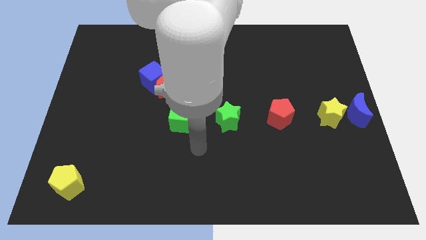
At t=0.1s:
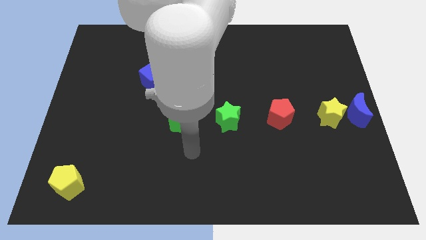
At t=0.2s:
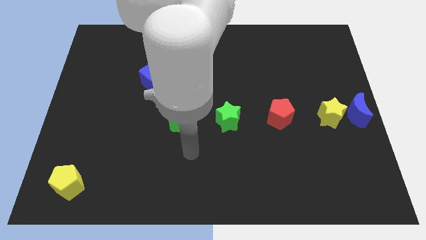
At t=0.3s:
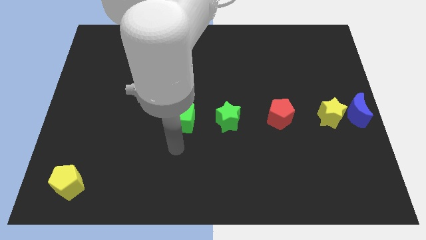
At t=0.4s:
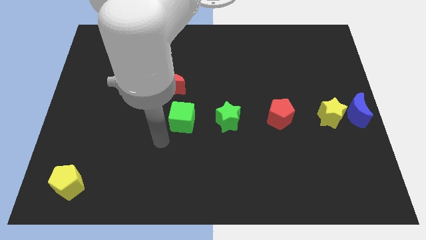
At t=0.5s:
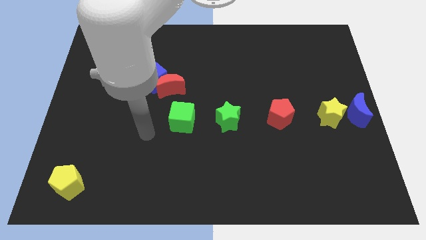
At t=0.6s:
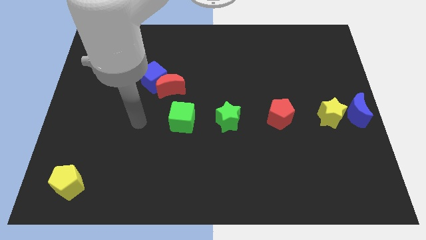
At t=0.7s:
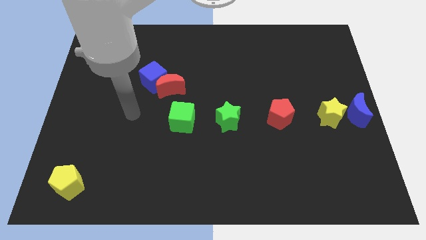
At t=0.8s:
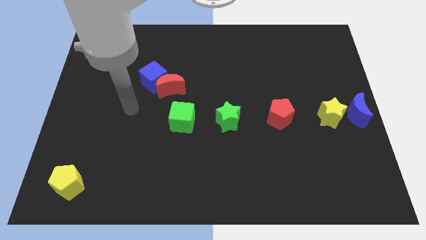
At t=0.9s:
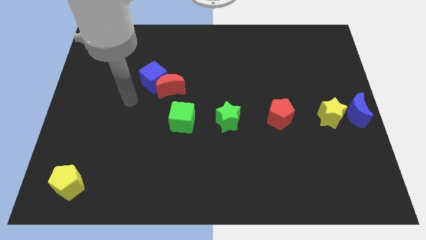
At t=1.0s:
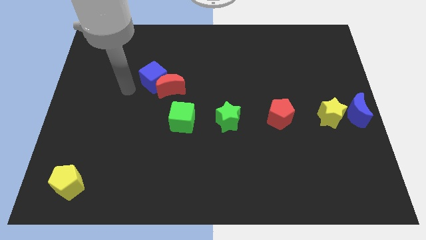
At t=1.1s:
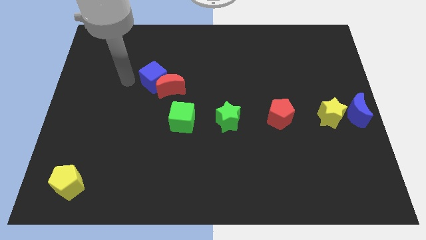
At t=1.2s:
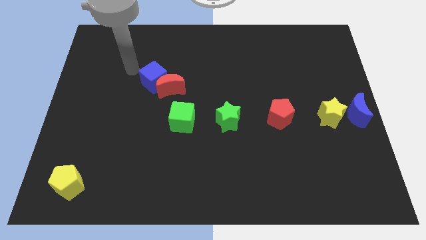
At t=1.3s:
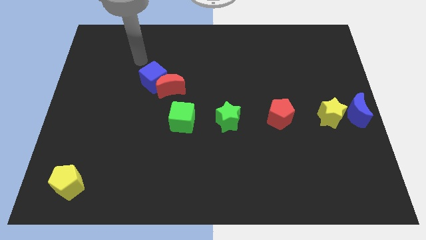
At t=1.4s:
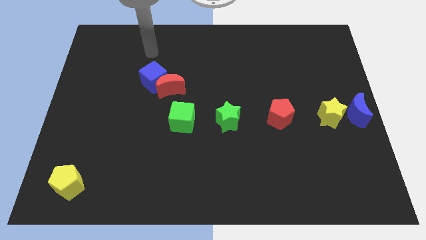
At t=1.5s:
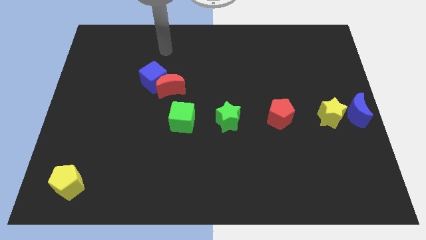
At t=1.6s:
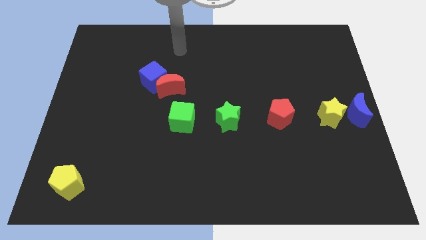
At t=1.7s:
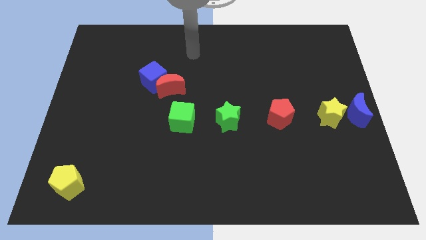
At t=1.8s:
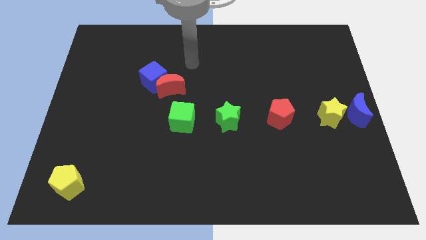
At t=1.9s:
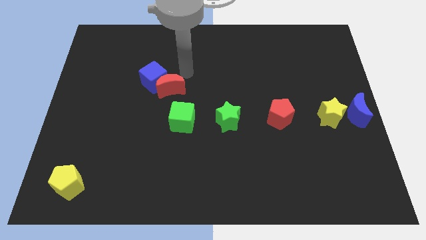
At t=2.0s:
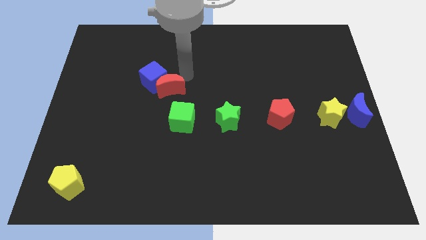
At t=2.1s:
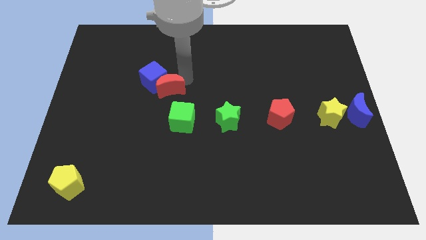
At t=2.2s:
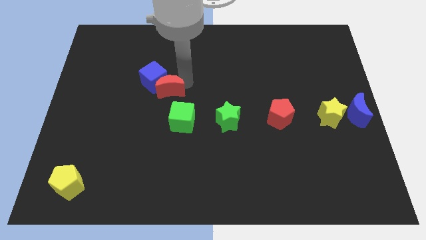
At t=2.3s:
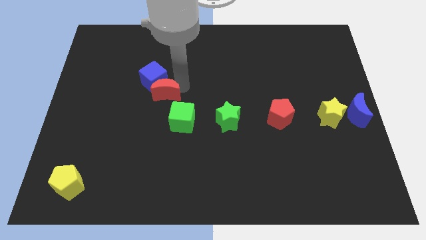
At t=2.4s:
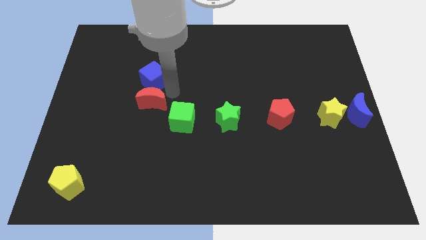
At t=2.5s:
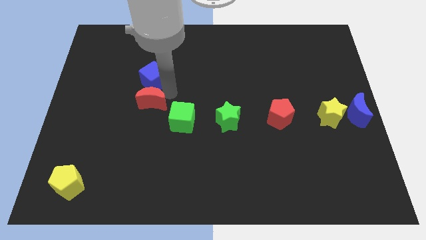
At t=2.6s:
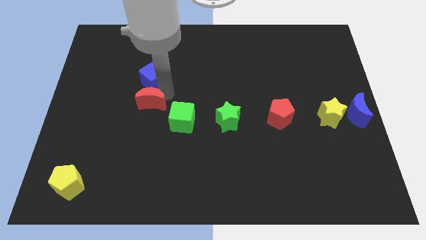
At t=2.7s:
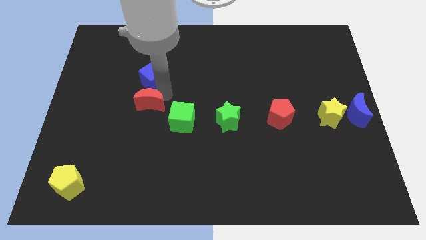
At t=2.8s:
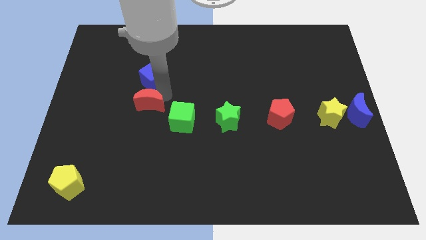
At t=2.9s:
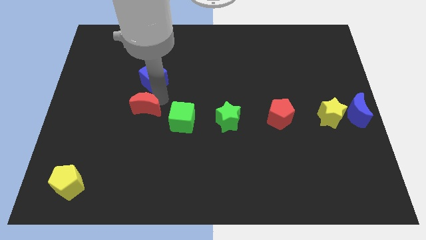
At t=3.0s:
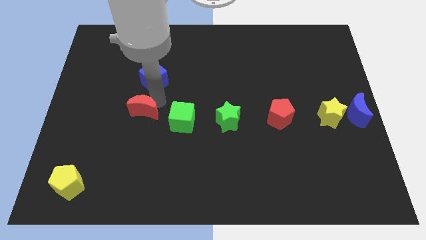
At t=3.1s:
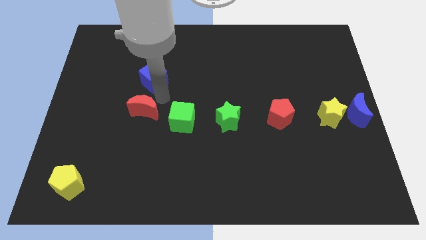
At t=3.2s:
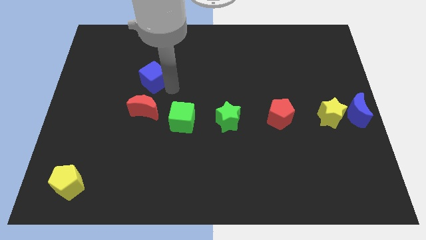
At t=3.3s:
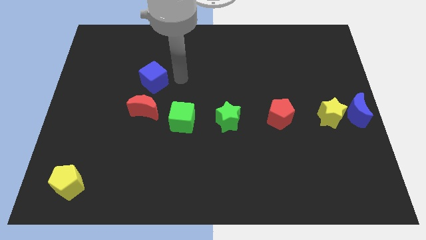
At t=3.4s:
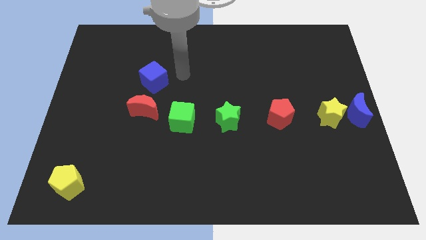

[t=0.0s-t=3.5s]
place red moon to the bottom of blue cube

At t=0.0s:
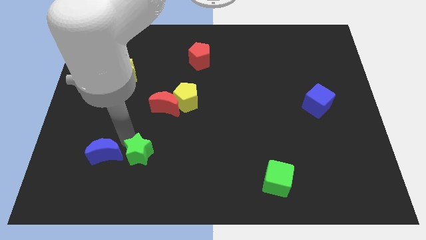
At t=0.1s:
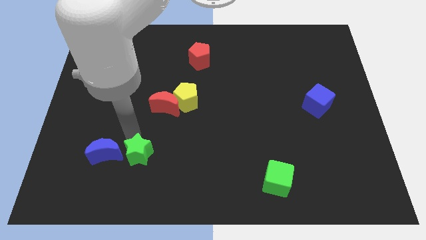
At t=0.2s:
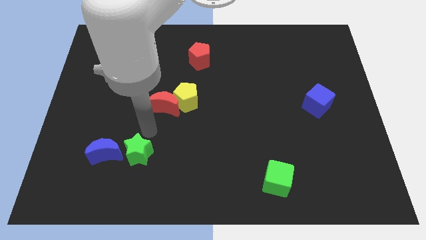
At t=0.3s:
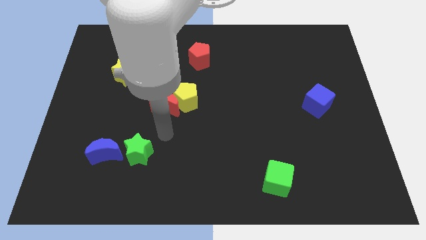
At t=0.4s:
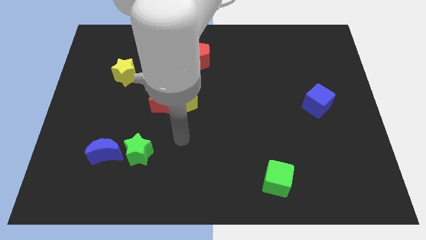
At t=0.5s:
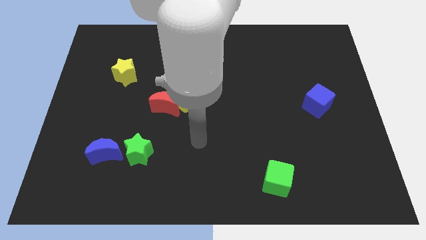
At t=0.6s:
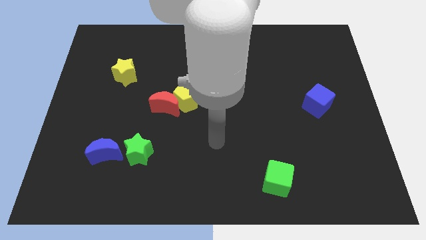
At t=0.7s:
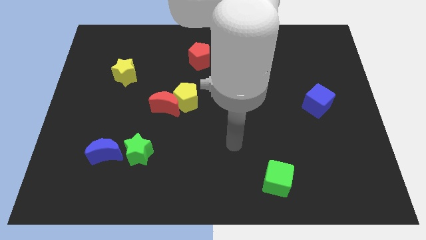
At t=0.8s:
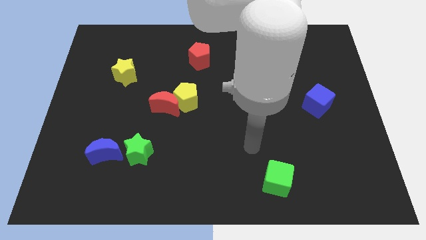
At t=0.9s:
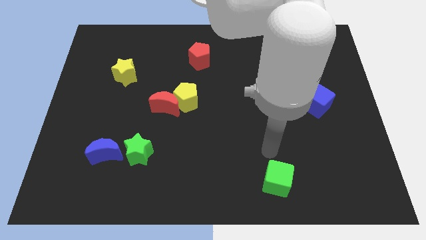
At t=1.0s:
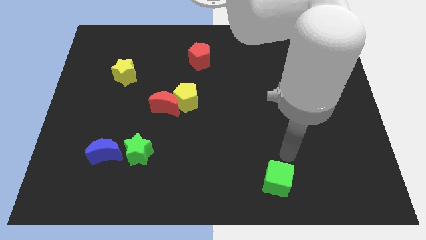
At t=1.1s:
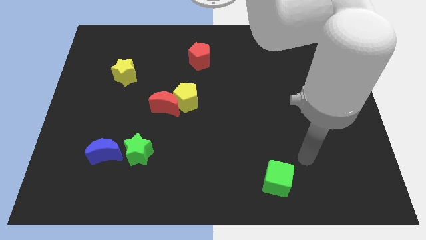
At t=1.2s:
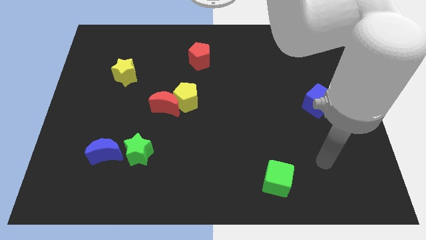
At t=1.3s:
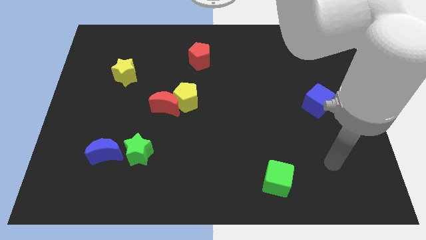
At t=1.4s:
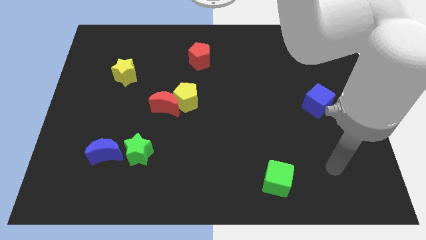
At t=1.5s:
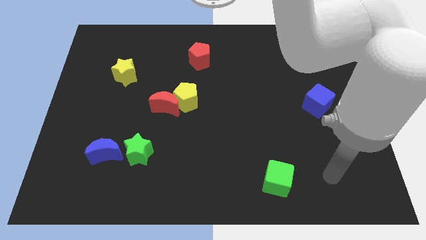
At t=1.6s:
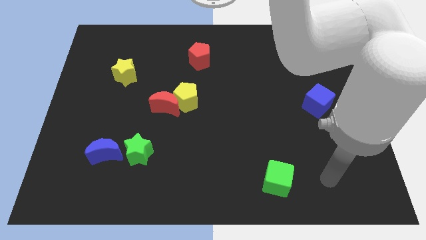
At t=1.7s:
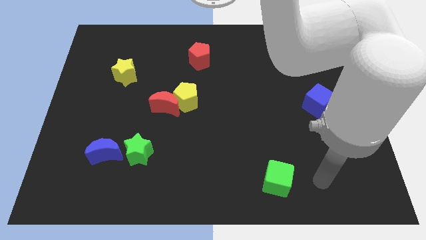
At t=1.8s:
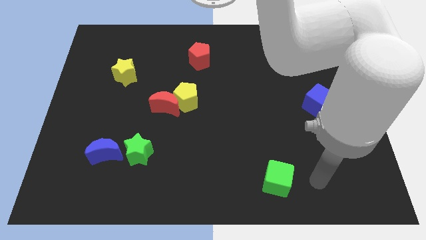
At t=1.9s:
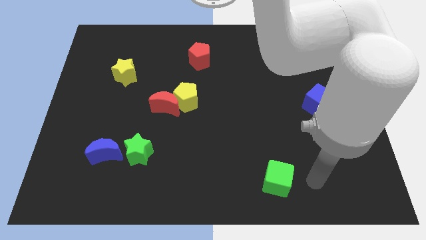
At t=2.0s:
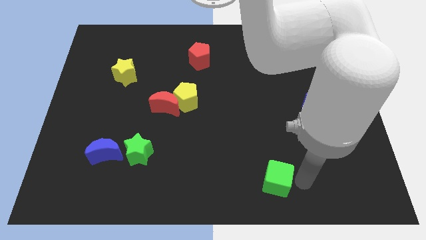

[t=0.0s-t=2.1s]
move your arm to the right of the green cube

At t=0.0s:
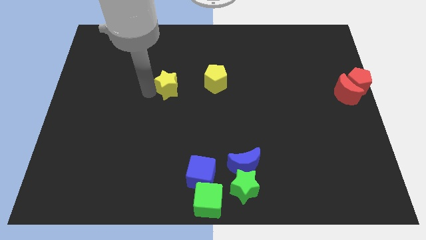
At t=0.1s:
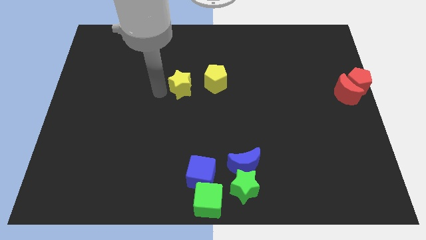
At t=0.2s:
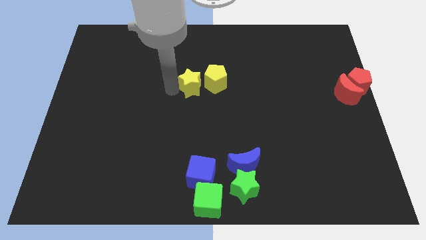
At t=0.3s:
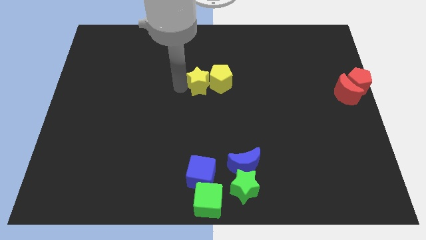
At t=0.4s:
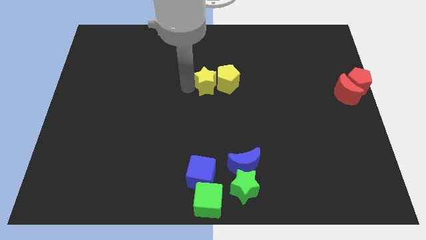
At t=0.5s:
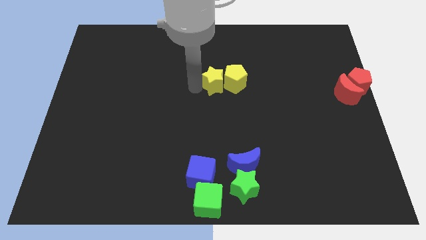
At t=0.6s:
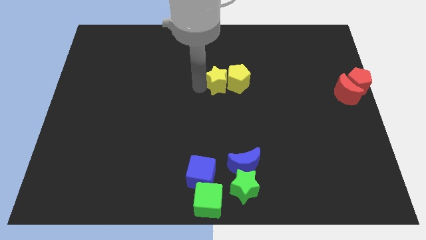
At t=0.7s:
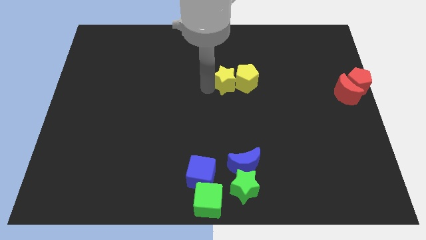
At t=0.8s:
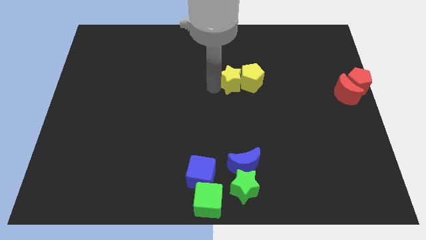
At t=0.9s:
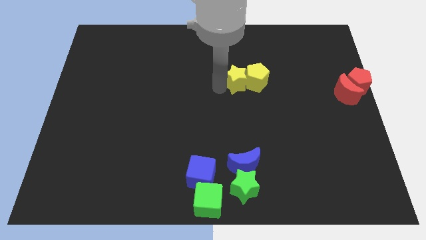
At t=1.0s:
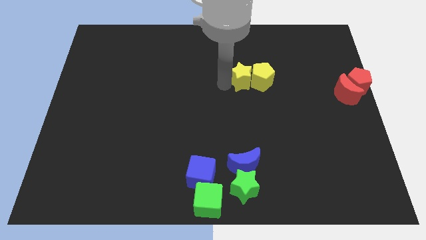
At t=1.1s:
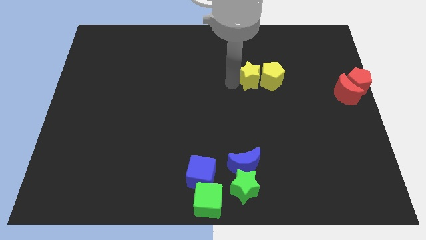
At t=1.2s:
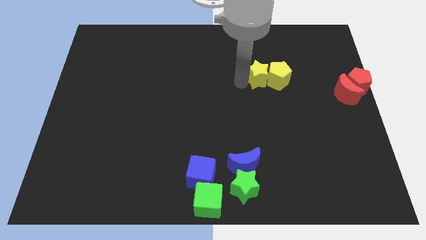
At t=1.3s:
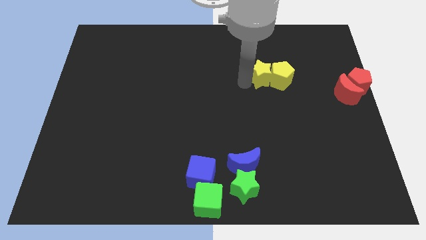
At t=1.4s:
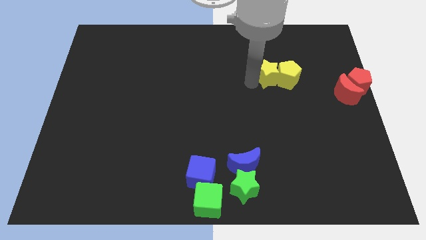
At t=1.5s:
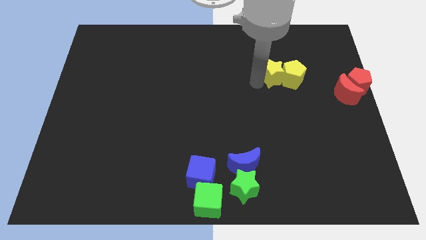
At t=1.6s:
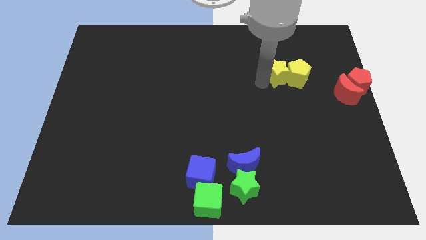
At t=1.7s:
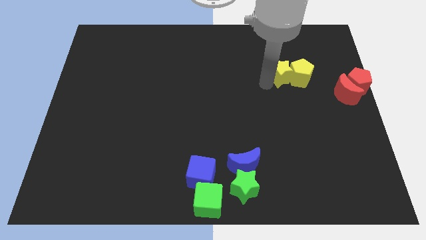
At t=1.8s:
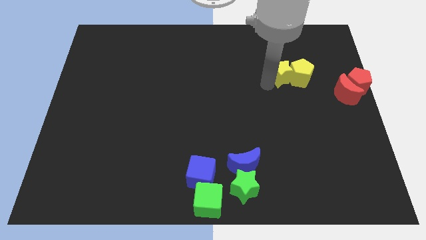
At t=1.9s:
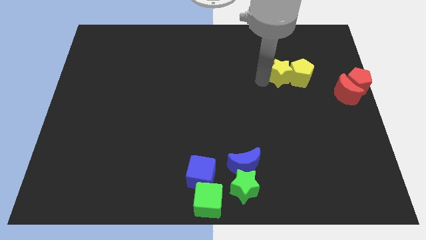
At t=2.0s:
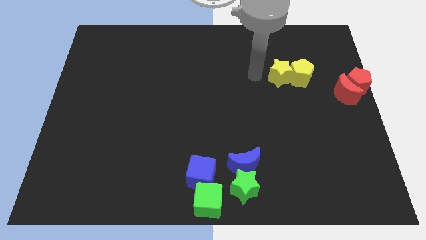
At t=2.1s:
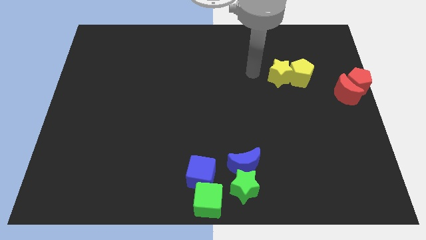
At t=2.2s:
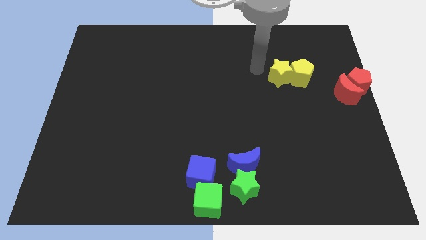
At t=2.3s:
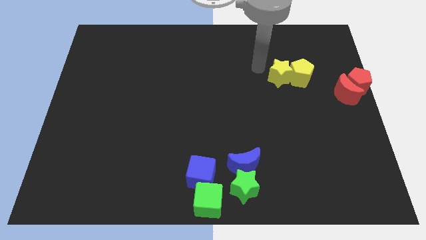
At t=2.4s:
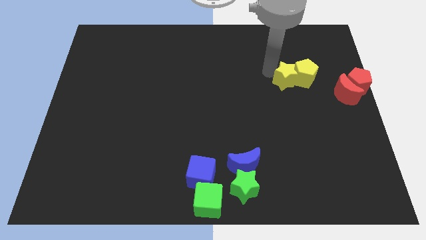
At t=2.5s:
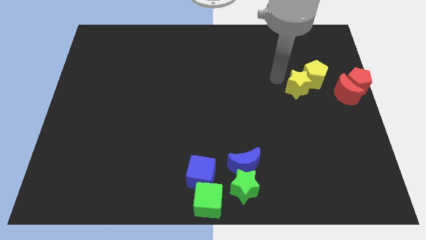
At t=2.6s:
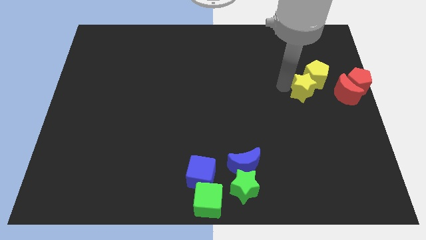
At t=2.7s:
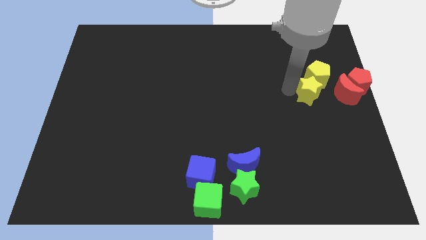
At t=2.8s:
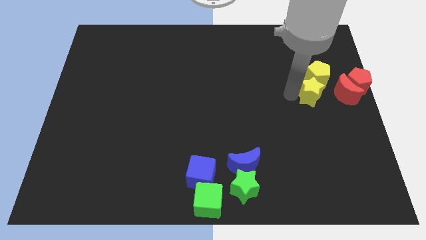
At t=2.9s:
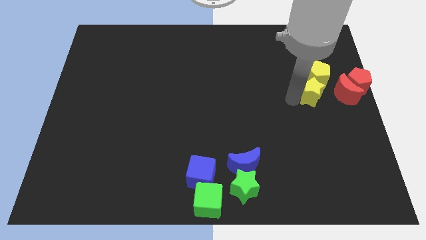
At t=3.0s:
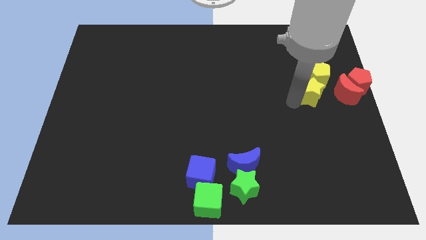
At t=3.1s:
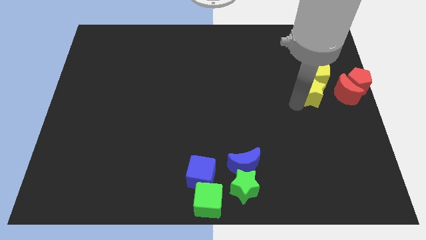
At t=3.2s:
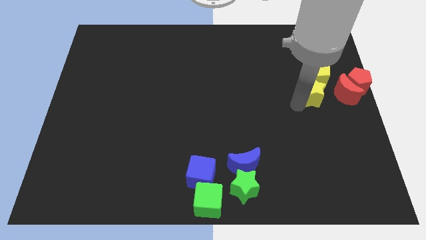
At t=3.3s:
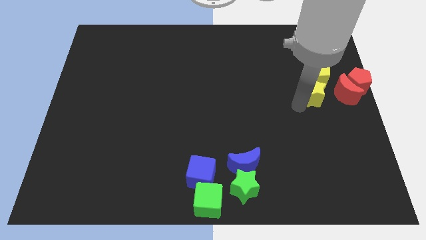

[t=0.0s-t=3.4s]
move the yellow pentagon and the yellow star towards the left side of the red blocks
